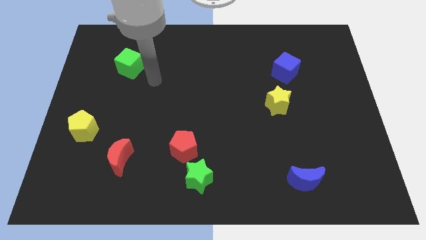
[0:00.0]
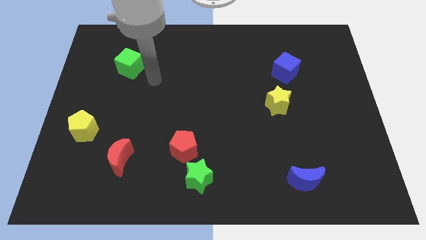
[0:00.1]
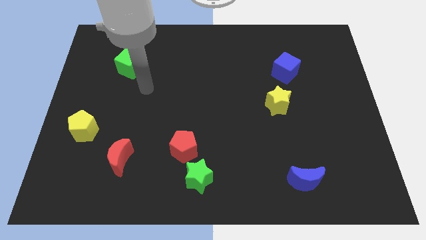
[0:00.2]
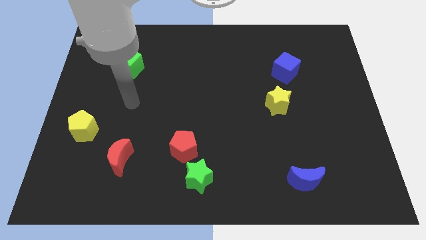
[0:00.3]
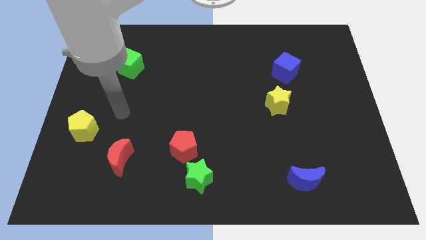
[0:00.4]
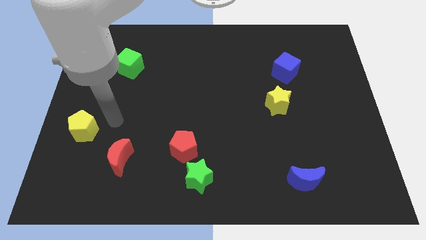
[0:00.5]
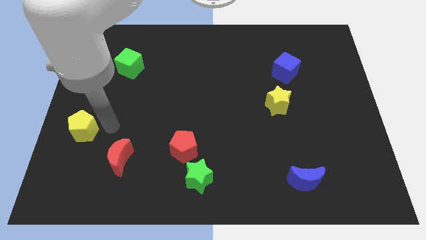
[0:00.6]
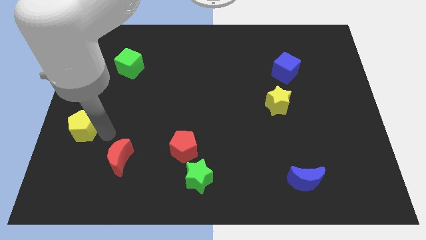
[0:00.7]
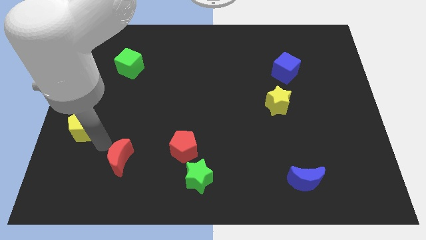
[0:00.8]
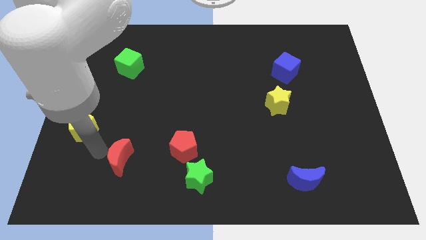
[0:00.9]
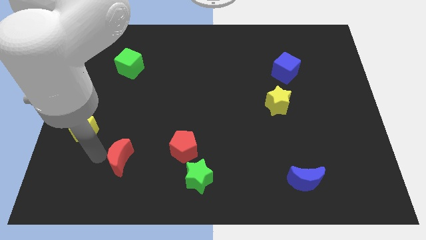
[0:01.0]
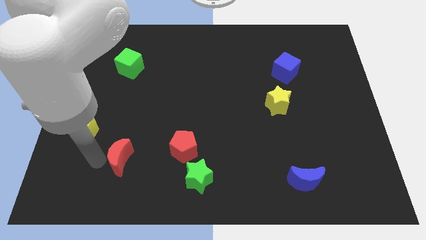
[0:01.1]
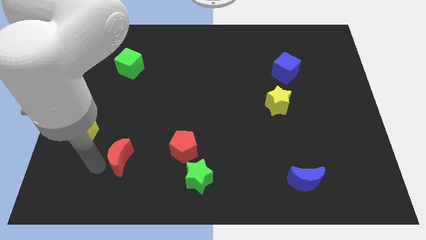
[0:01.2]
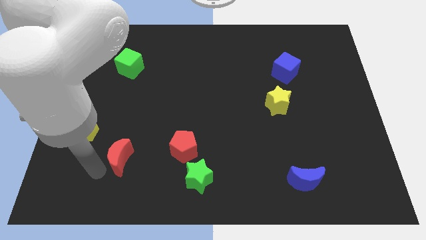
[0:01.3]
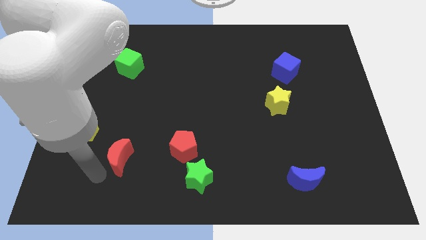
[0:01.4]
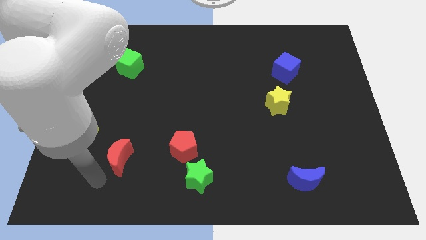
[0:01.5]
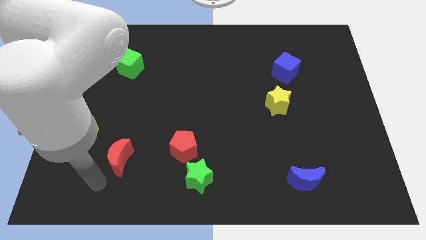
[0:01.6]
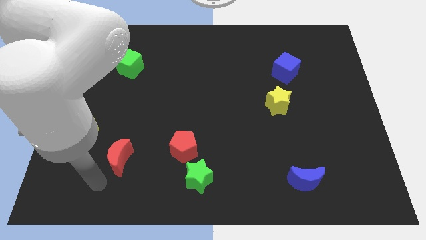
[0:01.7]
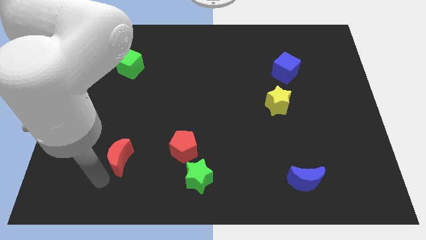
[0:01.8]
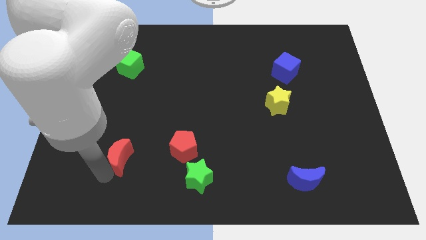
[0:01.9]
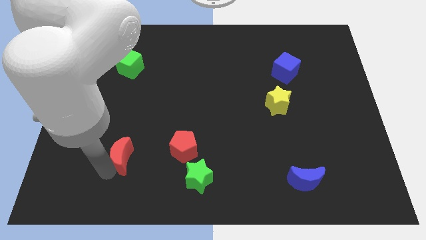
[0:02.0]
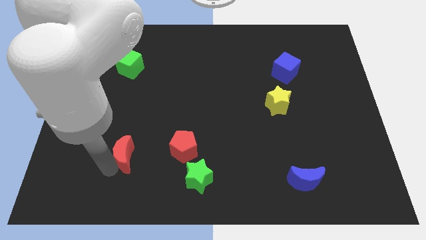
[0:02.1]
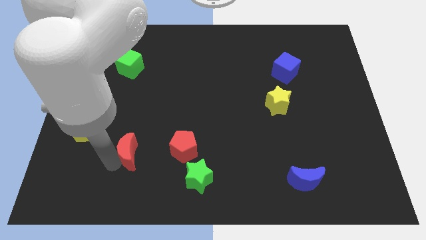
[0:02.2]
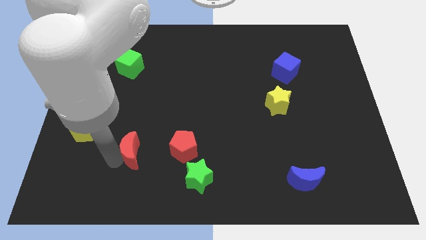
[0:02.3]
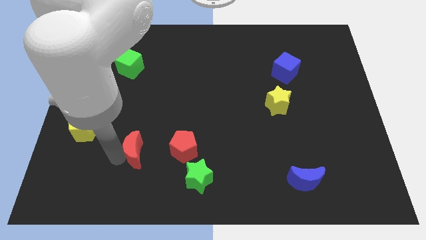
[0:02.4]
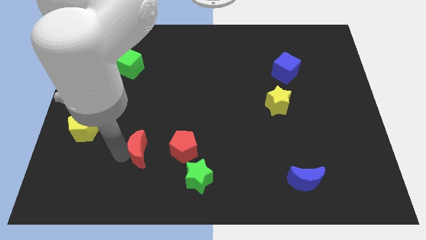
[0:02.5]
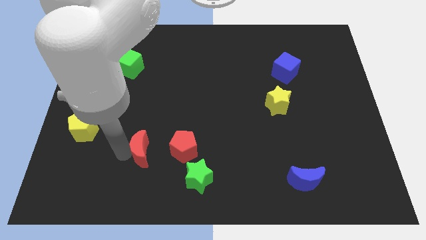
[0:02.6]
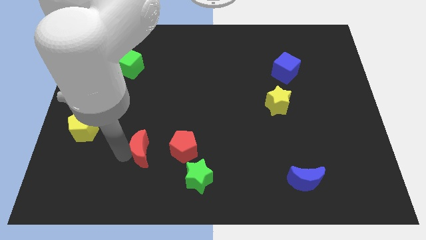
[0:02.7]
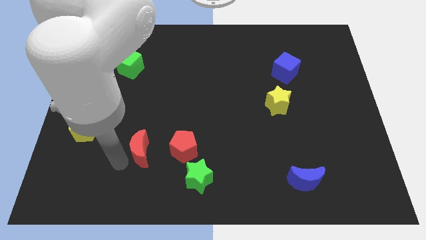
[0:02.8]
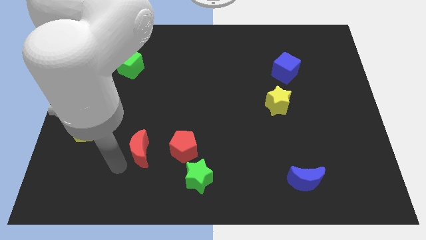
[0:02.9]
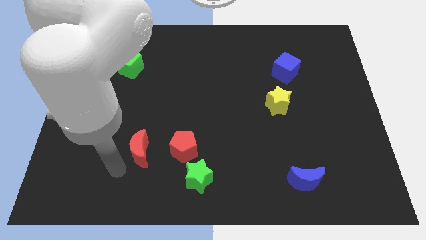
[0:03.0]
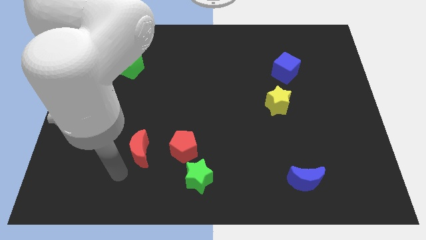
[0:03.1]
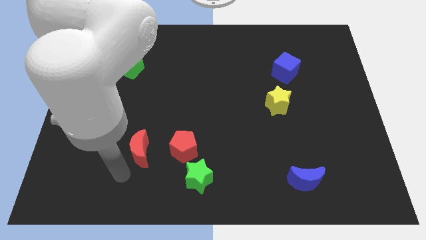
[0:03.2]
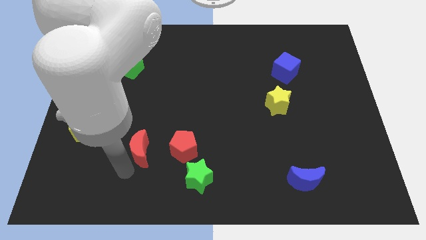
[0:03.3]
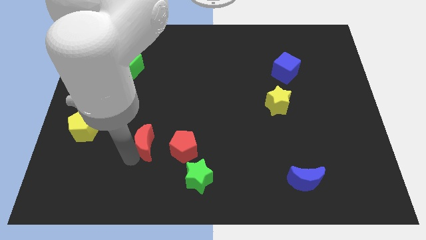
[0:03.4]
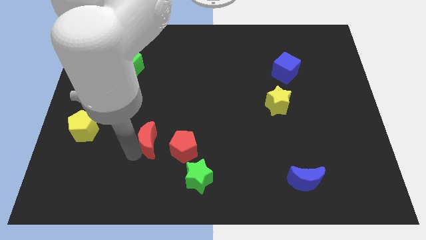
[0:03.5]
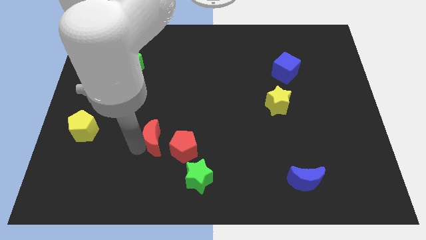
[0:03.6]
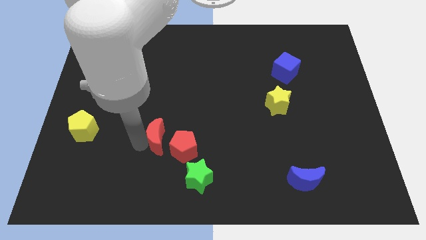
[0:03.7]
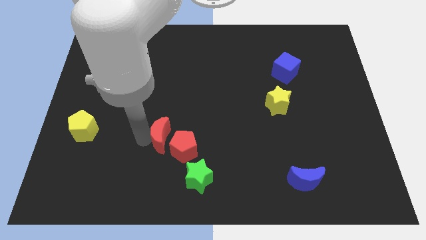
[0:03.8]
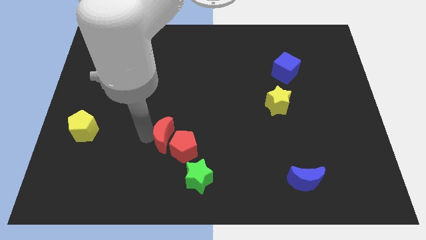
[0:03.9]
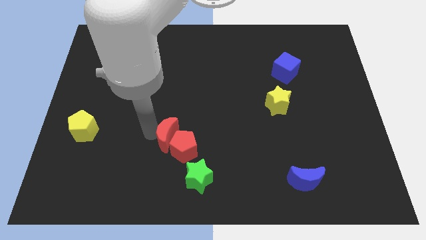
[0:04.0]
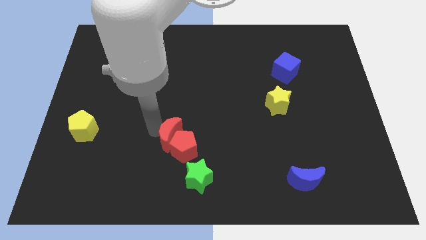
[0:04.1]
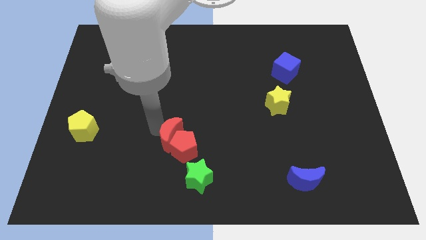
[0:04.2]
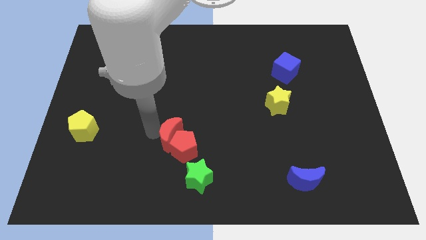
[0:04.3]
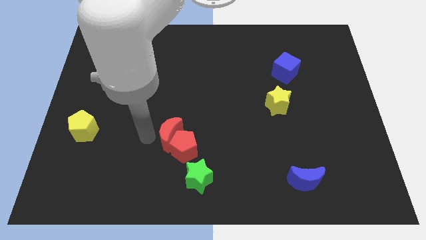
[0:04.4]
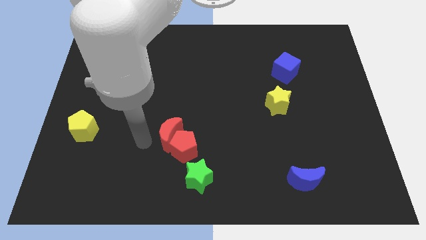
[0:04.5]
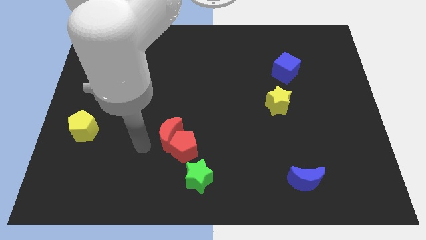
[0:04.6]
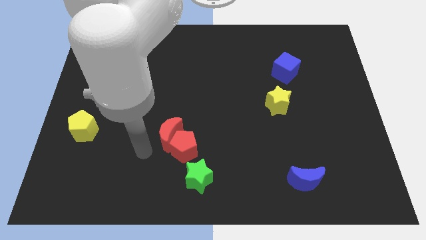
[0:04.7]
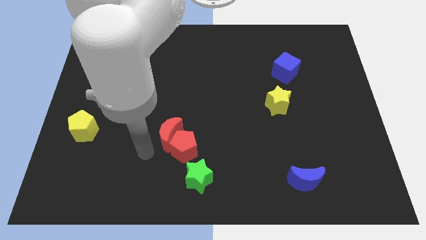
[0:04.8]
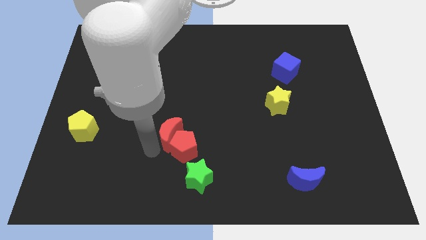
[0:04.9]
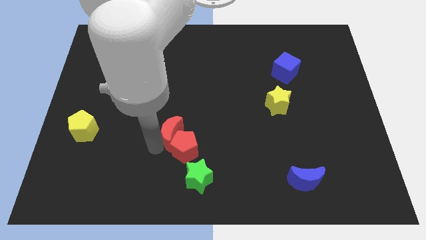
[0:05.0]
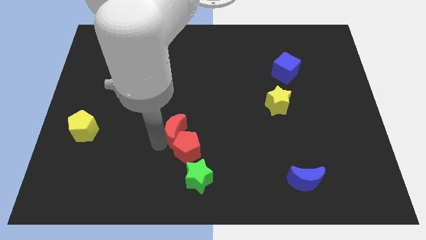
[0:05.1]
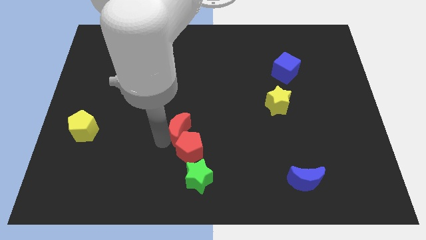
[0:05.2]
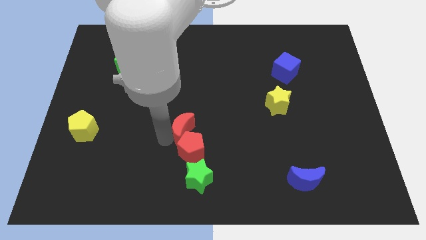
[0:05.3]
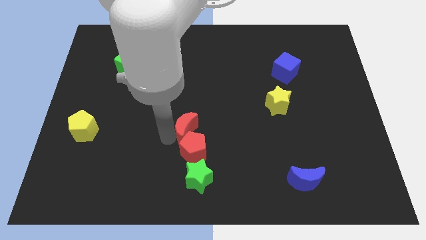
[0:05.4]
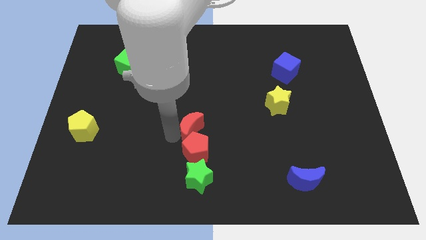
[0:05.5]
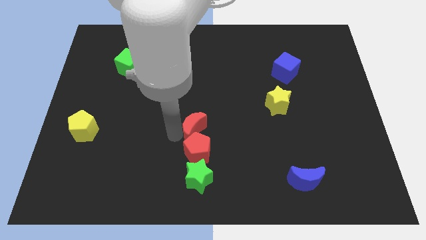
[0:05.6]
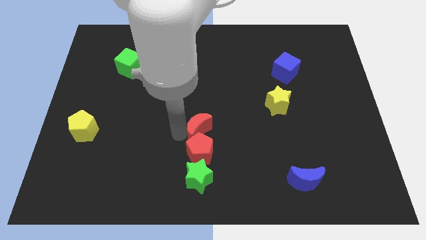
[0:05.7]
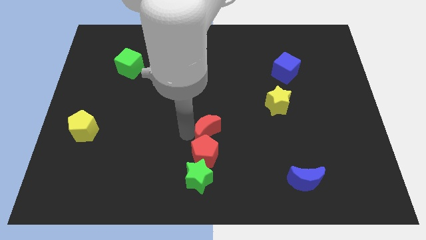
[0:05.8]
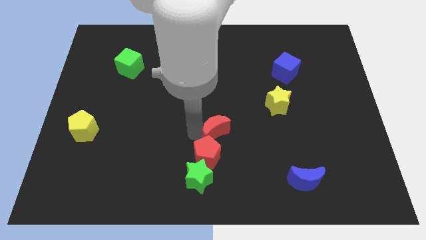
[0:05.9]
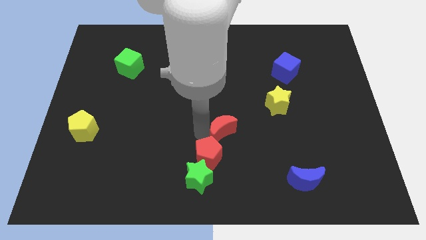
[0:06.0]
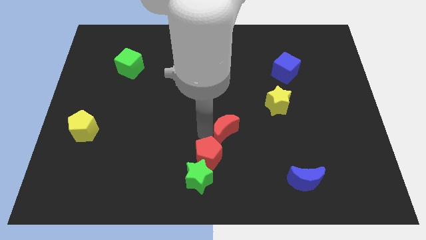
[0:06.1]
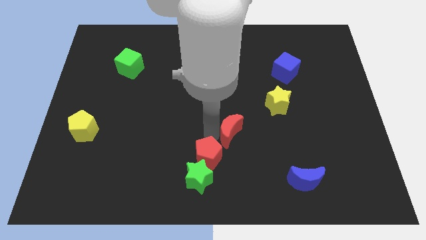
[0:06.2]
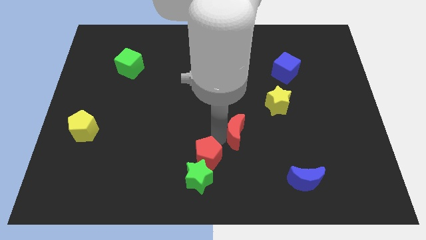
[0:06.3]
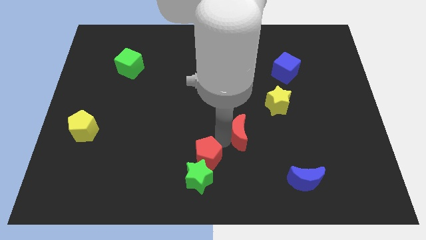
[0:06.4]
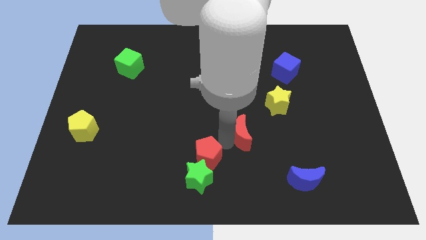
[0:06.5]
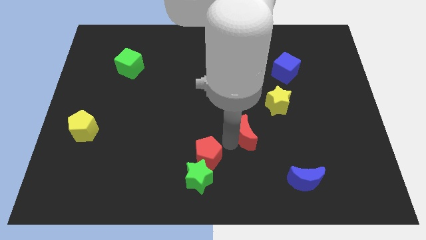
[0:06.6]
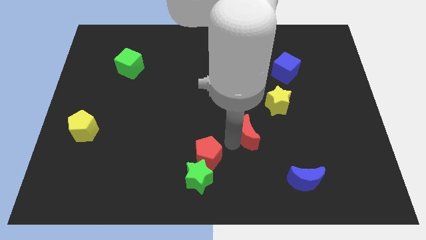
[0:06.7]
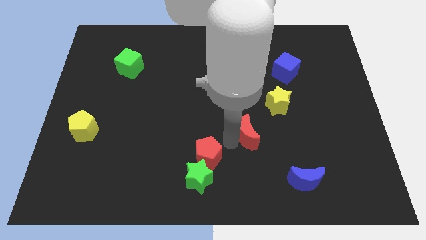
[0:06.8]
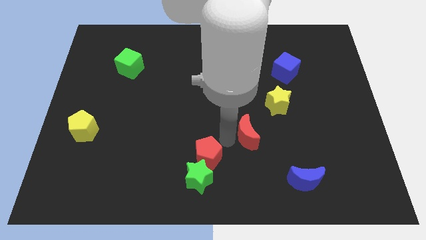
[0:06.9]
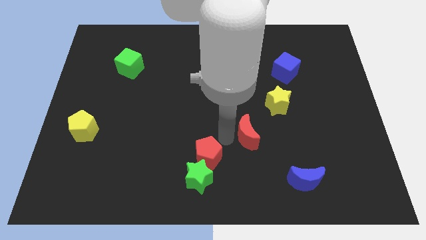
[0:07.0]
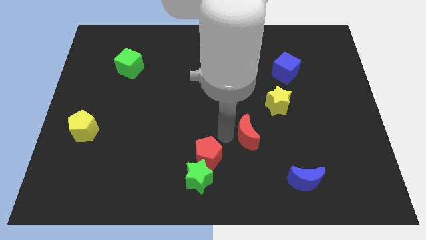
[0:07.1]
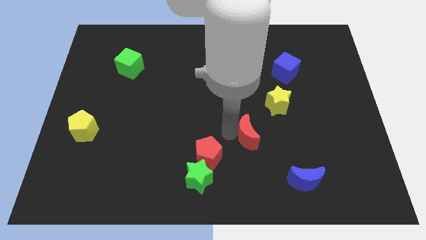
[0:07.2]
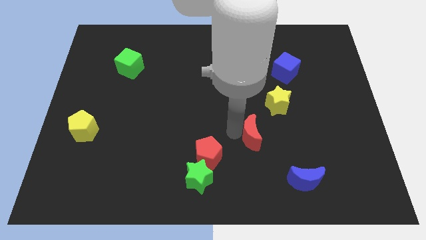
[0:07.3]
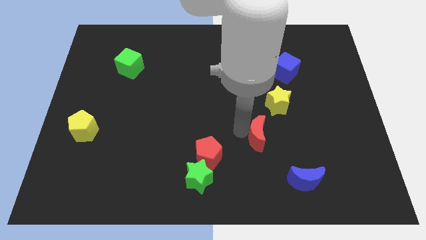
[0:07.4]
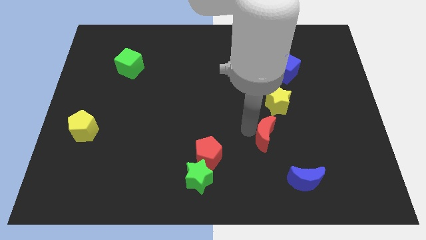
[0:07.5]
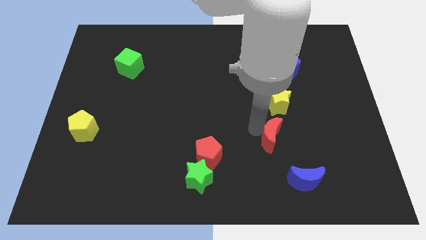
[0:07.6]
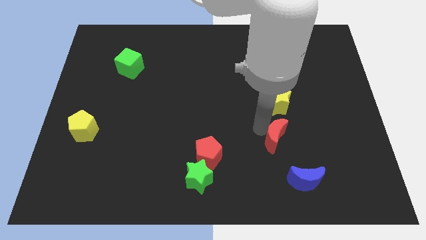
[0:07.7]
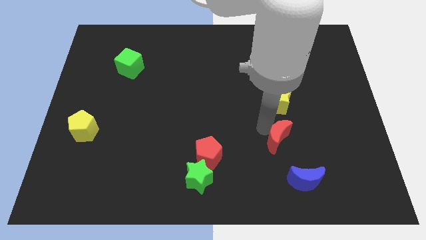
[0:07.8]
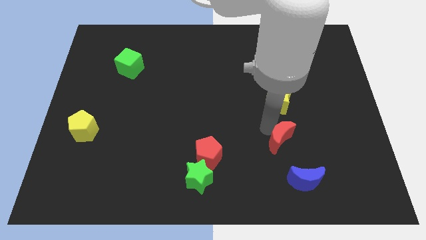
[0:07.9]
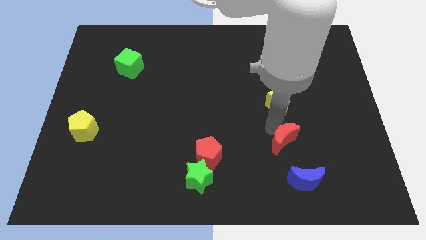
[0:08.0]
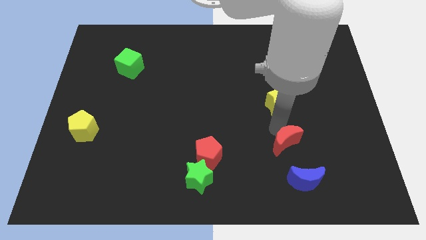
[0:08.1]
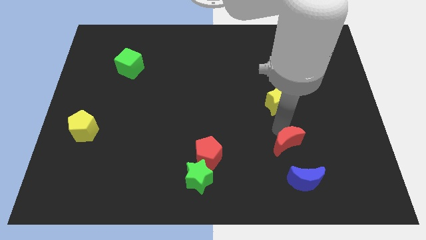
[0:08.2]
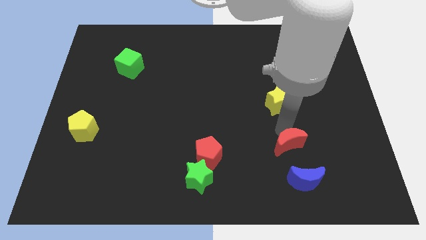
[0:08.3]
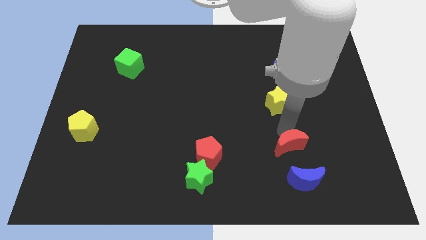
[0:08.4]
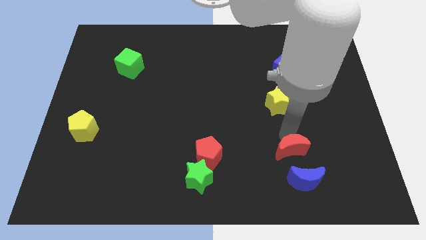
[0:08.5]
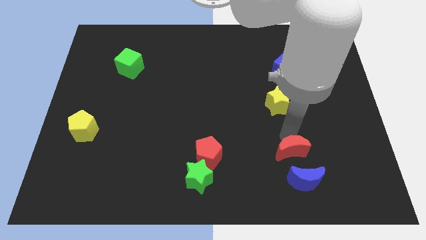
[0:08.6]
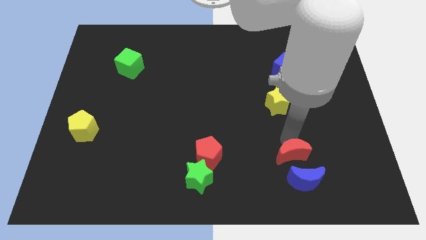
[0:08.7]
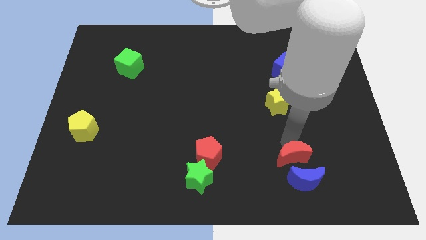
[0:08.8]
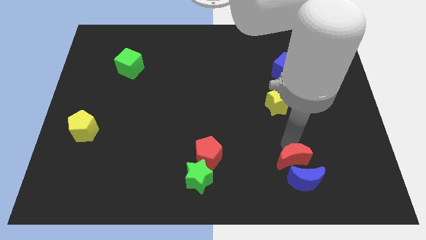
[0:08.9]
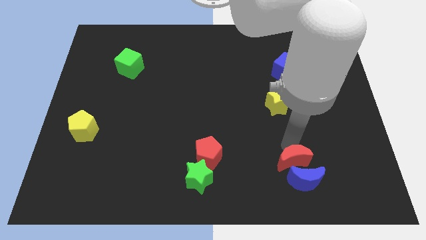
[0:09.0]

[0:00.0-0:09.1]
move the red moon towards the blue moon
